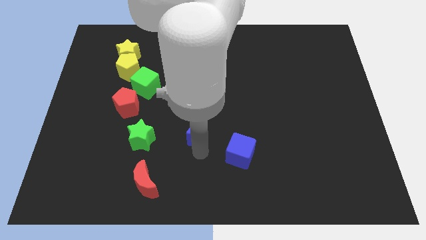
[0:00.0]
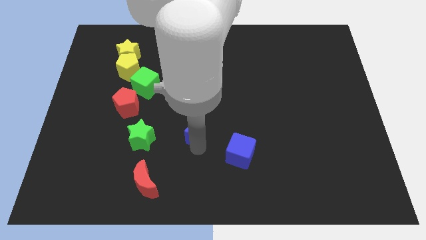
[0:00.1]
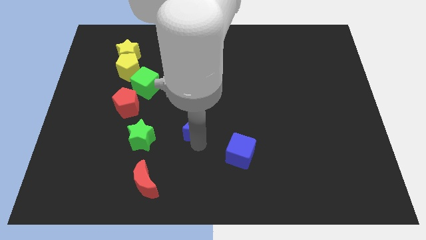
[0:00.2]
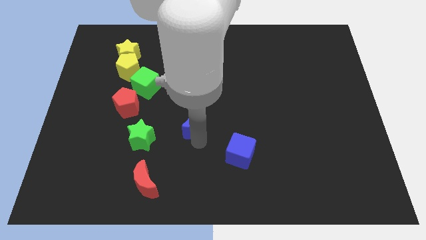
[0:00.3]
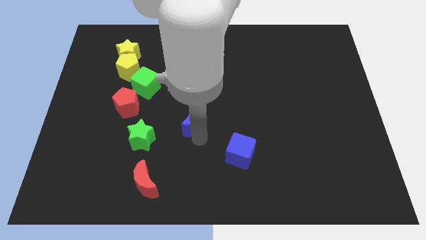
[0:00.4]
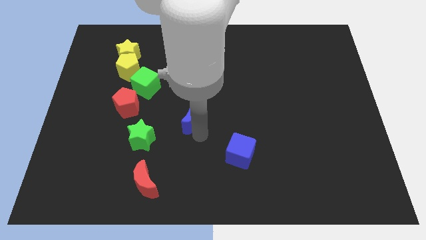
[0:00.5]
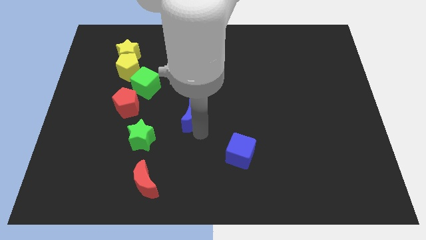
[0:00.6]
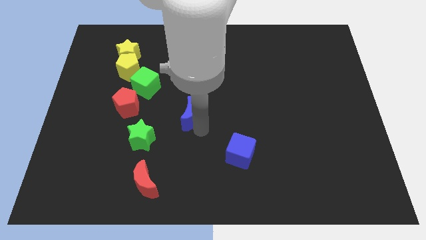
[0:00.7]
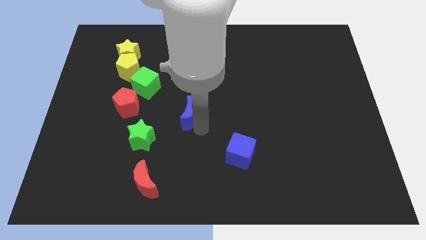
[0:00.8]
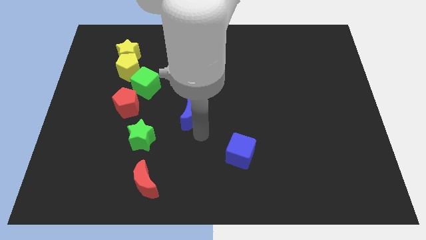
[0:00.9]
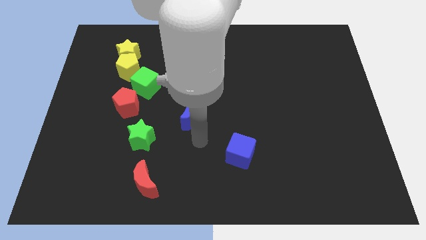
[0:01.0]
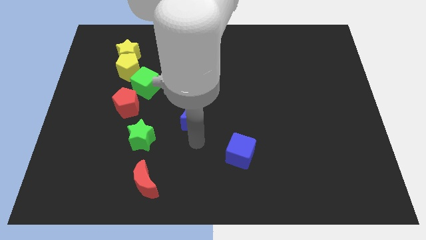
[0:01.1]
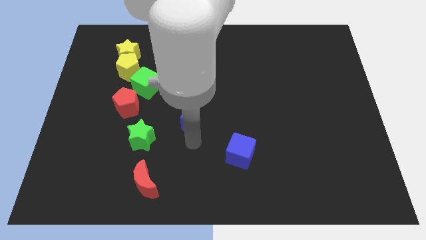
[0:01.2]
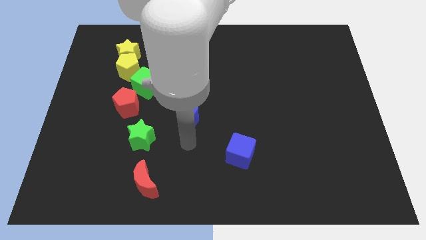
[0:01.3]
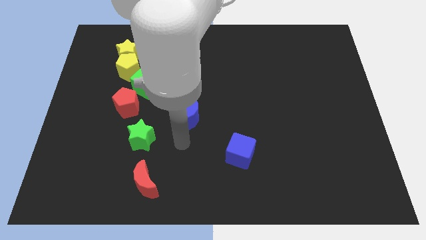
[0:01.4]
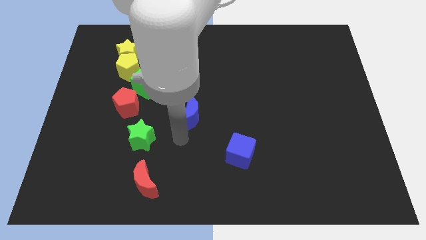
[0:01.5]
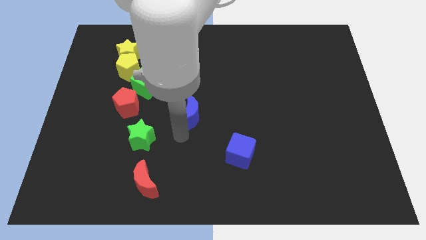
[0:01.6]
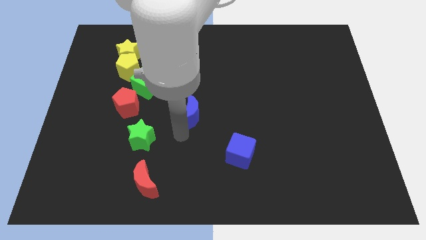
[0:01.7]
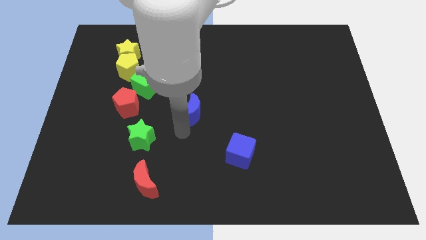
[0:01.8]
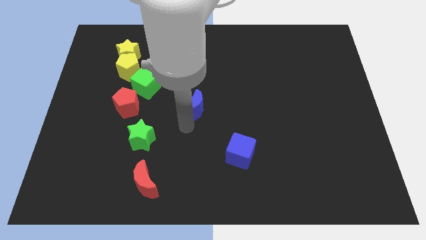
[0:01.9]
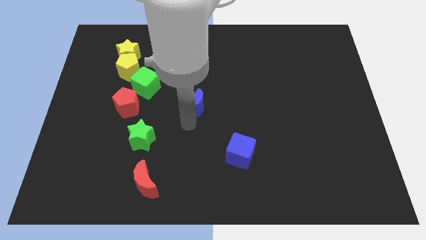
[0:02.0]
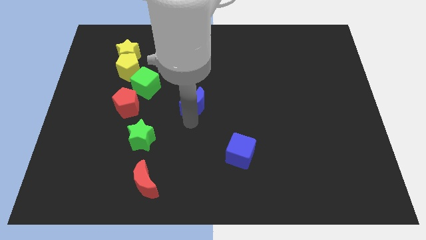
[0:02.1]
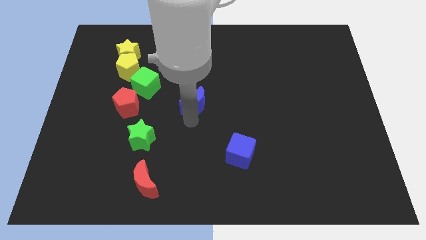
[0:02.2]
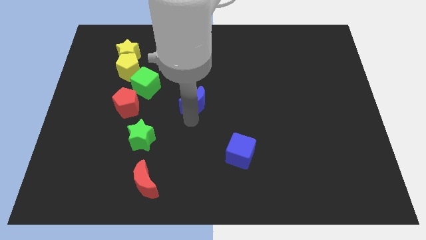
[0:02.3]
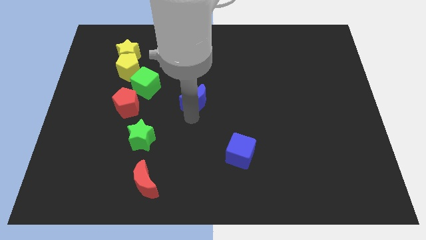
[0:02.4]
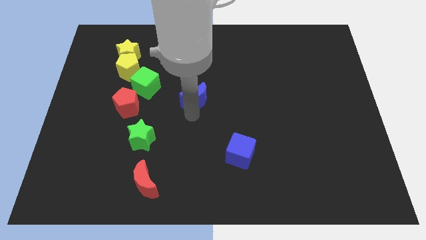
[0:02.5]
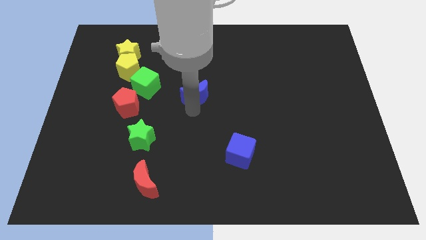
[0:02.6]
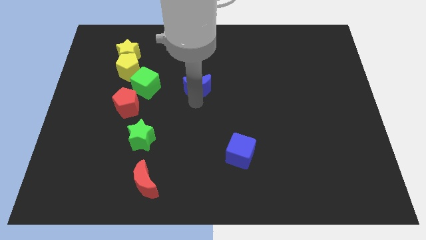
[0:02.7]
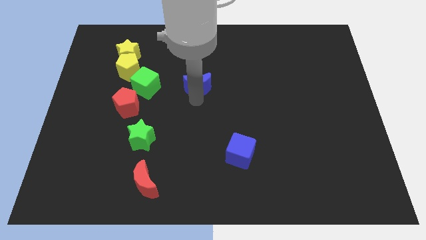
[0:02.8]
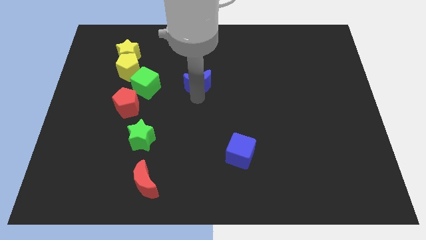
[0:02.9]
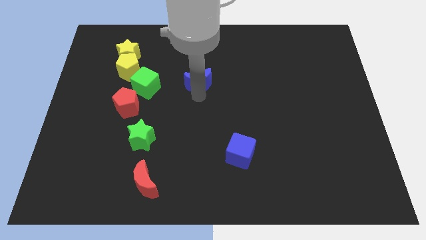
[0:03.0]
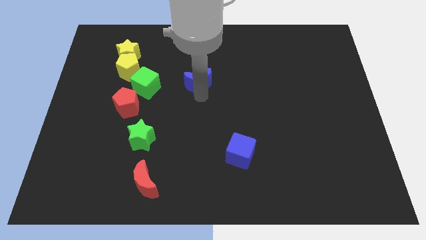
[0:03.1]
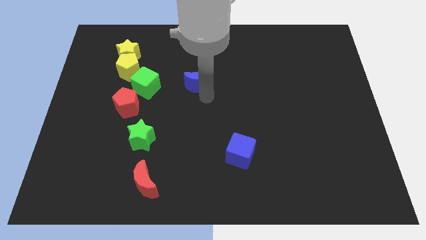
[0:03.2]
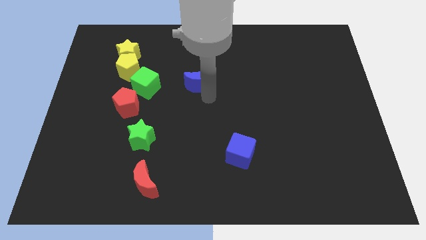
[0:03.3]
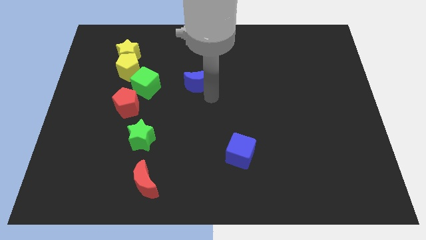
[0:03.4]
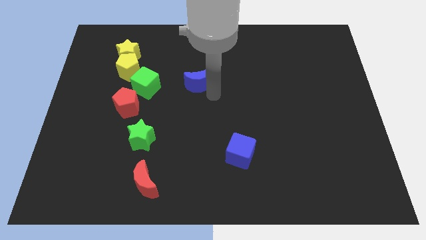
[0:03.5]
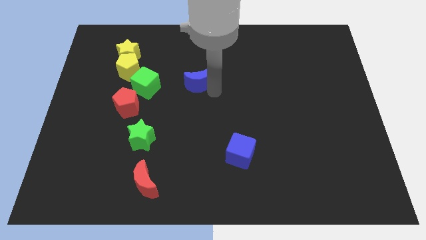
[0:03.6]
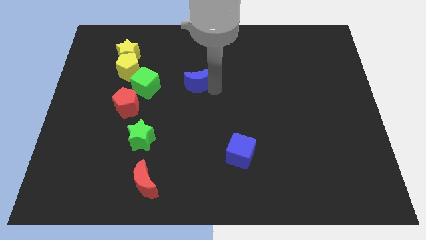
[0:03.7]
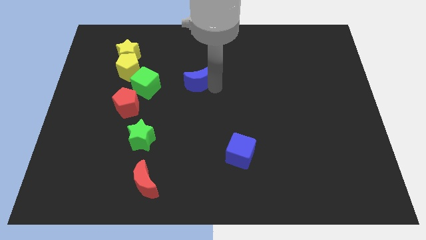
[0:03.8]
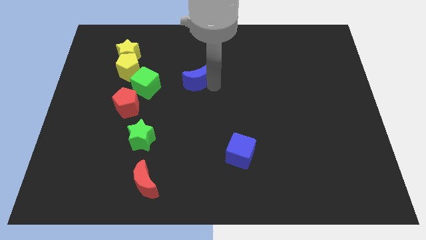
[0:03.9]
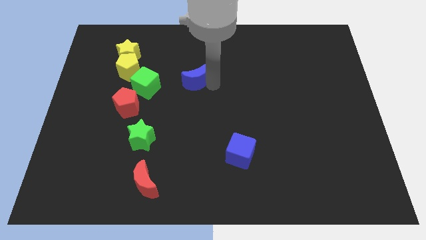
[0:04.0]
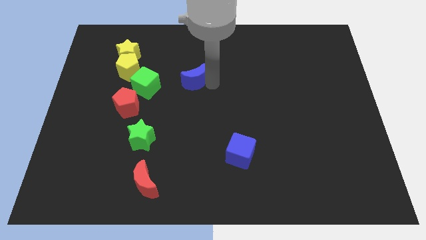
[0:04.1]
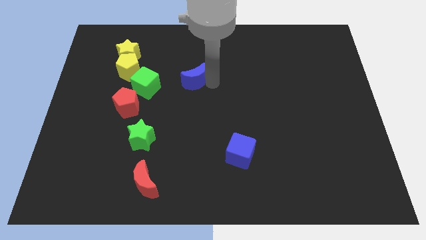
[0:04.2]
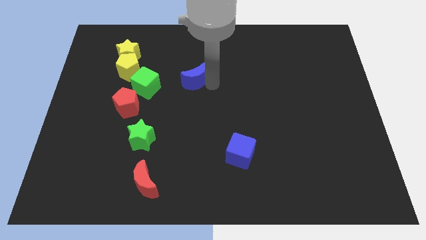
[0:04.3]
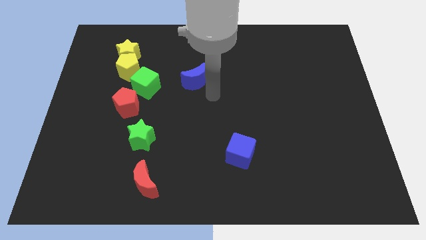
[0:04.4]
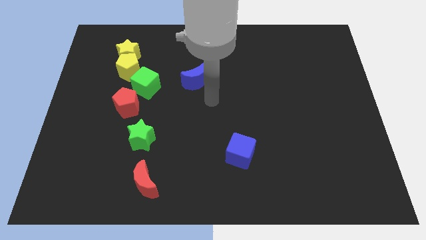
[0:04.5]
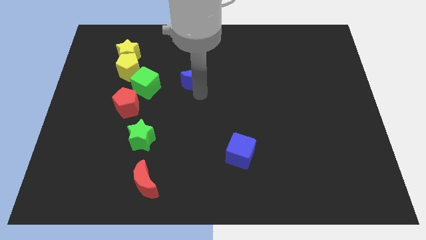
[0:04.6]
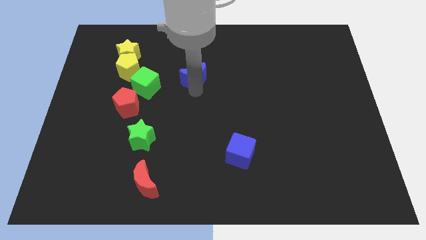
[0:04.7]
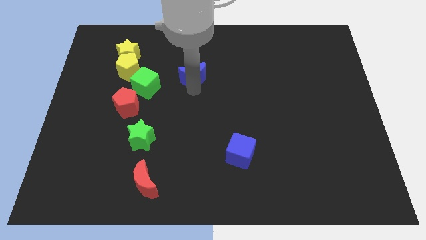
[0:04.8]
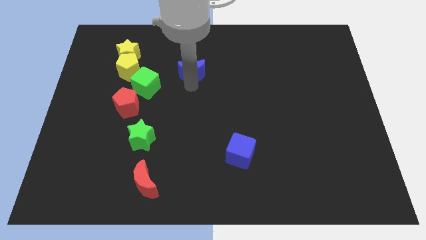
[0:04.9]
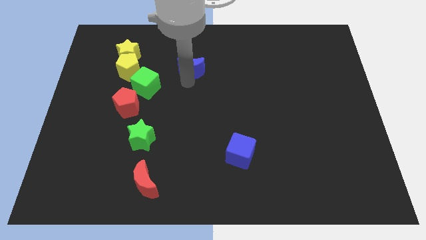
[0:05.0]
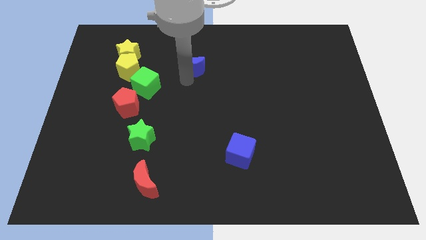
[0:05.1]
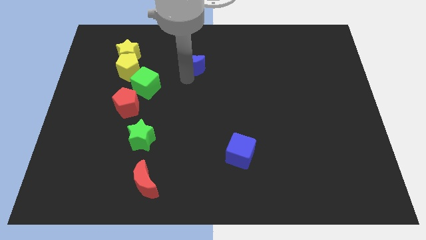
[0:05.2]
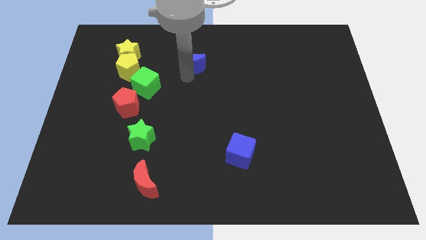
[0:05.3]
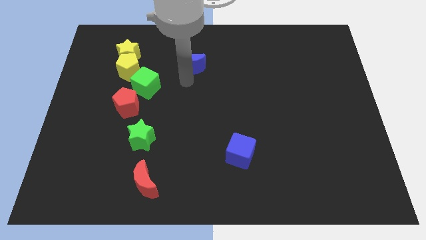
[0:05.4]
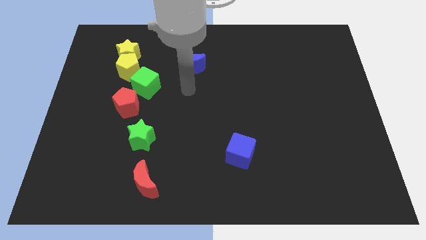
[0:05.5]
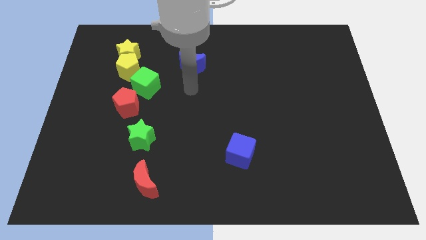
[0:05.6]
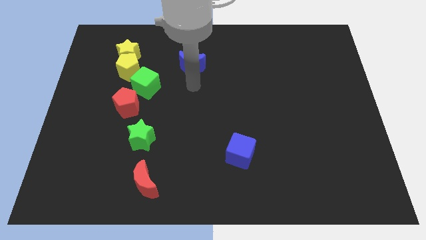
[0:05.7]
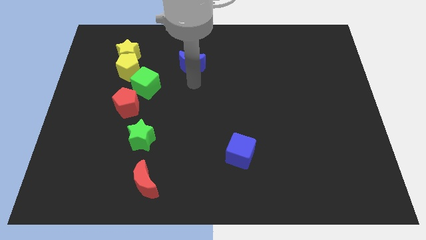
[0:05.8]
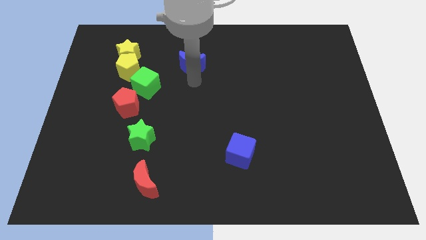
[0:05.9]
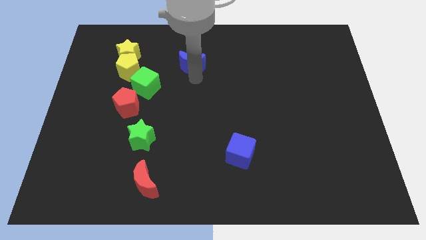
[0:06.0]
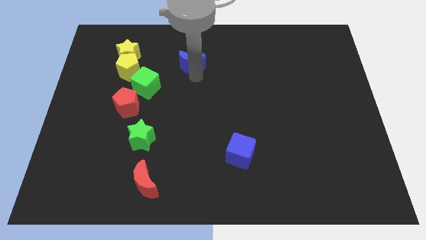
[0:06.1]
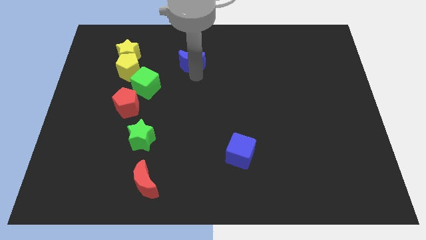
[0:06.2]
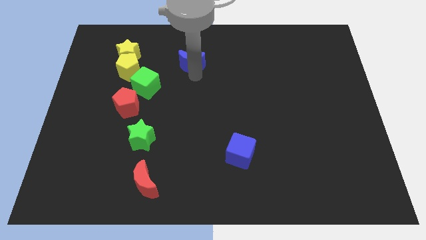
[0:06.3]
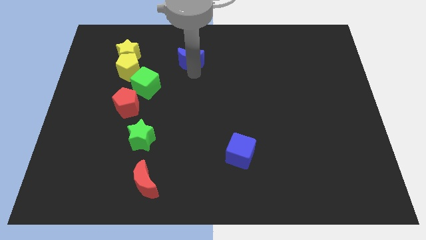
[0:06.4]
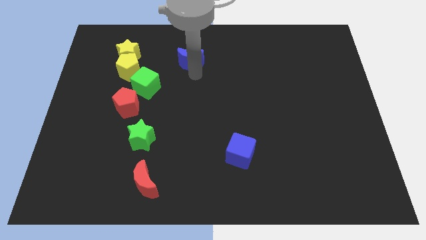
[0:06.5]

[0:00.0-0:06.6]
place the blue crescent to the right of the group of yellow blocks

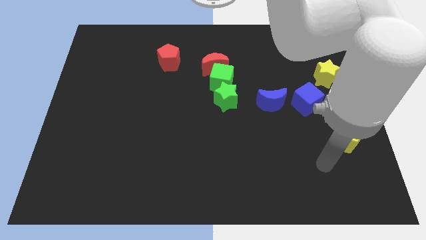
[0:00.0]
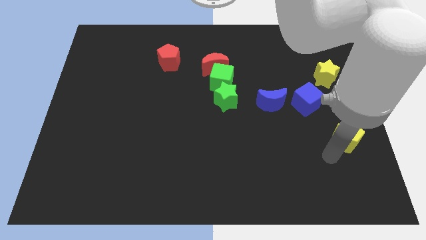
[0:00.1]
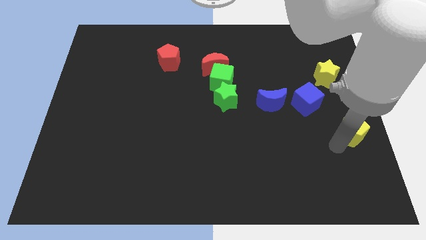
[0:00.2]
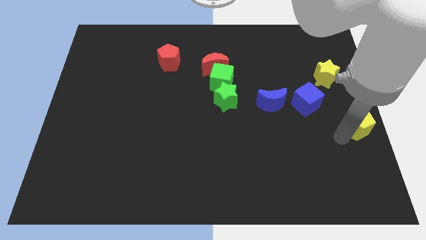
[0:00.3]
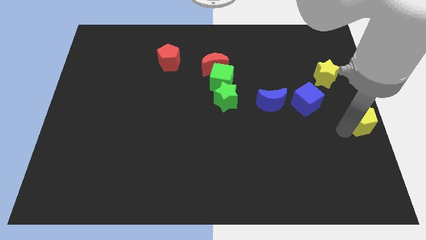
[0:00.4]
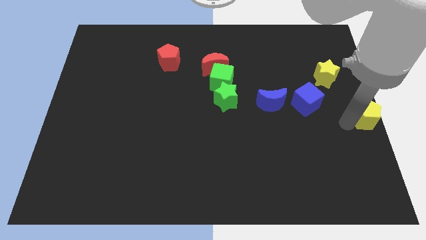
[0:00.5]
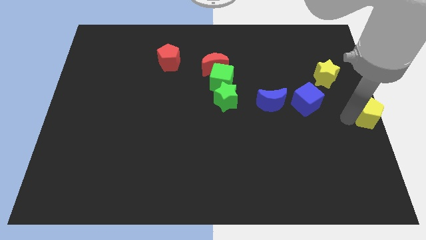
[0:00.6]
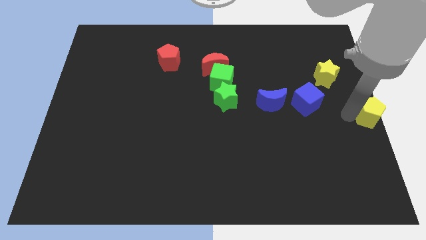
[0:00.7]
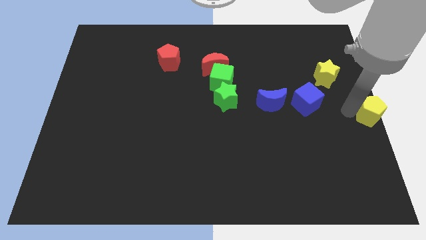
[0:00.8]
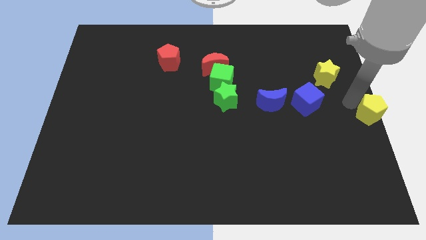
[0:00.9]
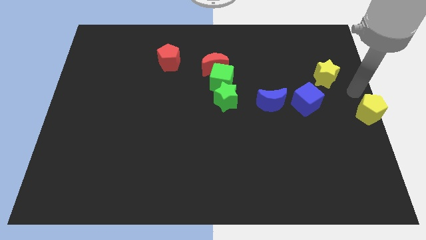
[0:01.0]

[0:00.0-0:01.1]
move the yellow pentagon to the center right

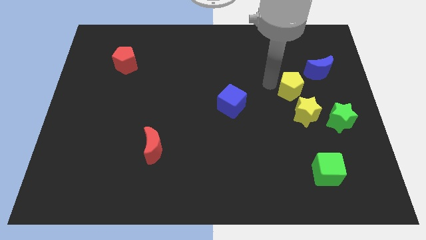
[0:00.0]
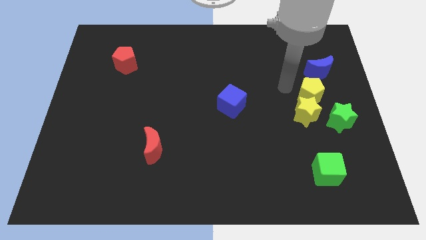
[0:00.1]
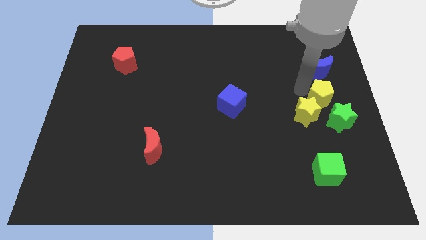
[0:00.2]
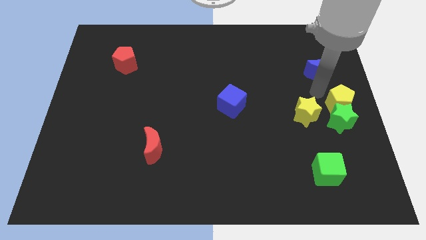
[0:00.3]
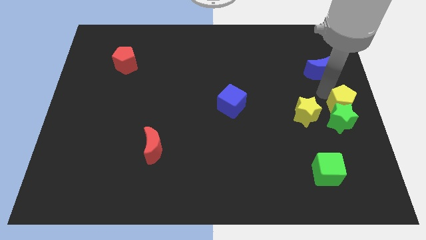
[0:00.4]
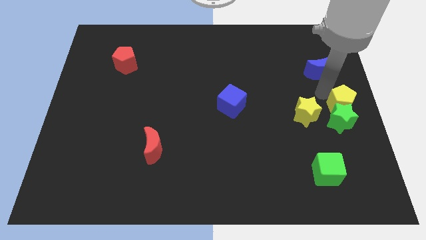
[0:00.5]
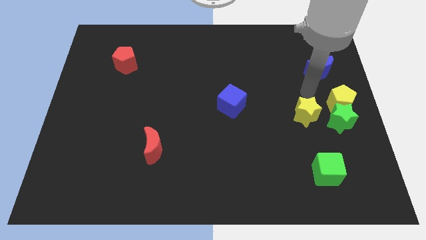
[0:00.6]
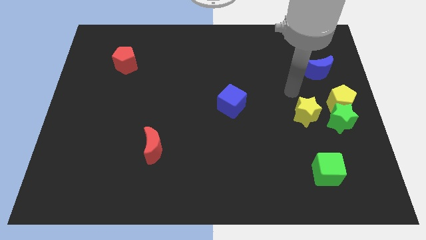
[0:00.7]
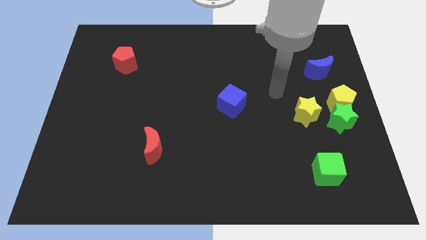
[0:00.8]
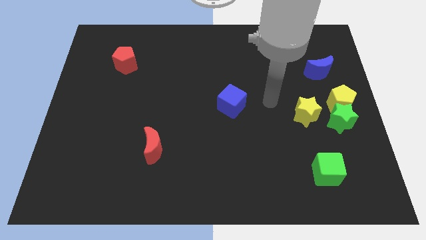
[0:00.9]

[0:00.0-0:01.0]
push yellow pentagon above green star

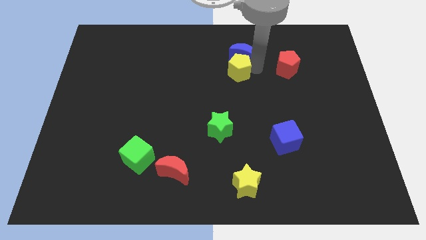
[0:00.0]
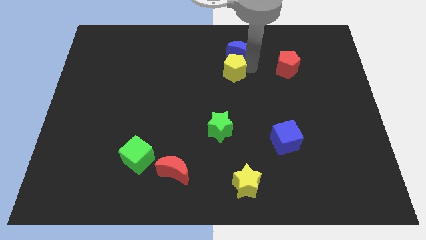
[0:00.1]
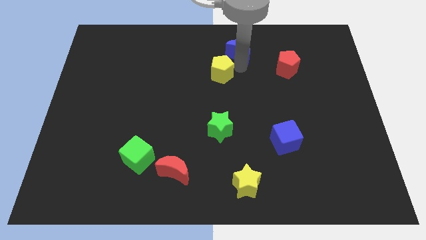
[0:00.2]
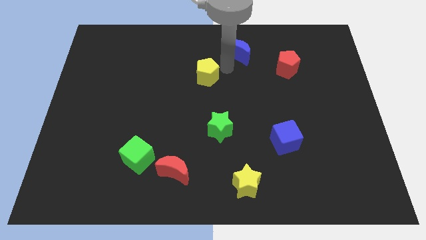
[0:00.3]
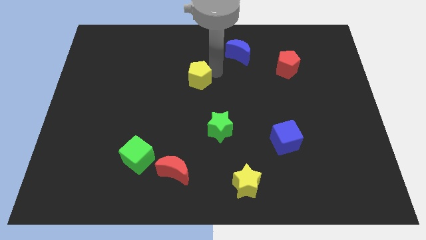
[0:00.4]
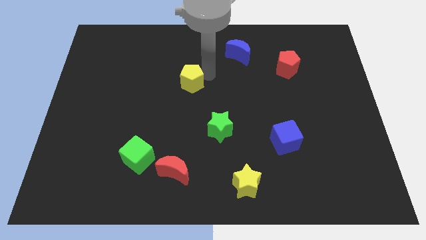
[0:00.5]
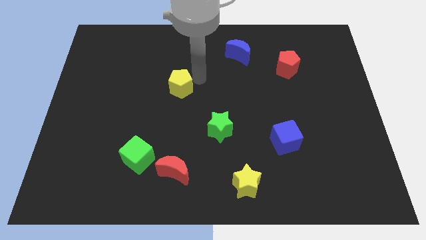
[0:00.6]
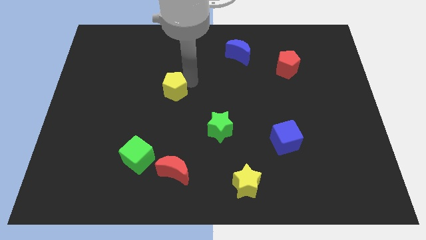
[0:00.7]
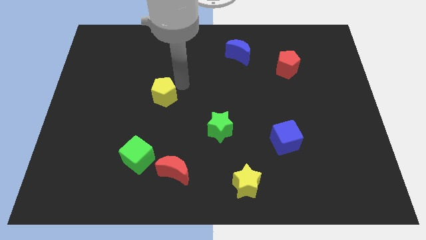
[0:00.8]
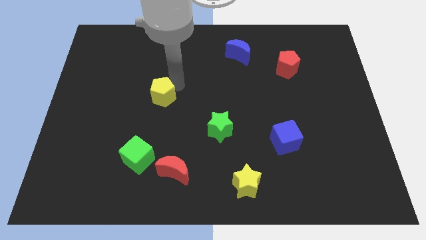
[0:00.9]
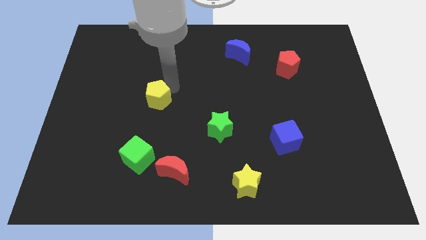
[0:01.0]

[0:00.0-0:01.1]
move yellow pentagon downwards
